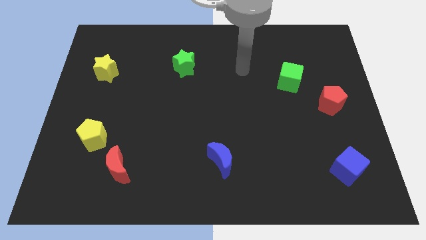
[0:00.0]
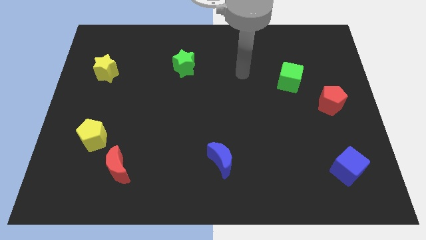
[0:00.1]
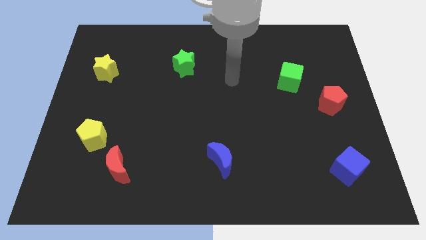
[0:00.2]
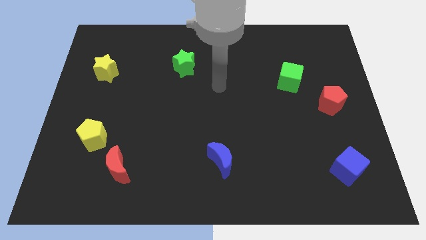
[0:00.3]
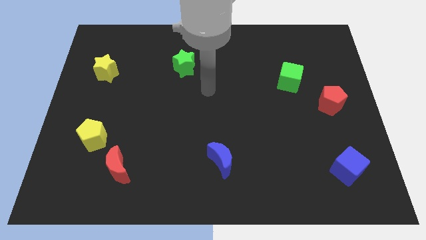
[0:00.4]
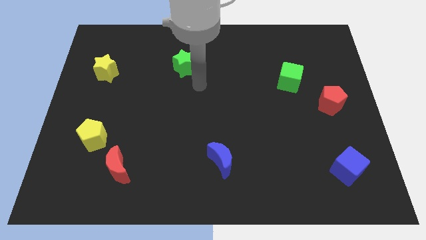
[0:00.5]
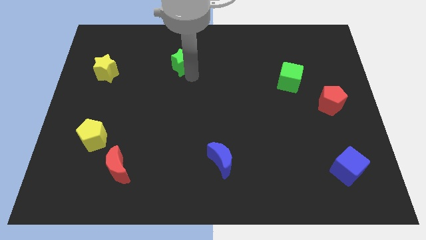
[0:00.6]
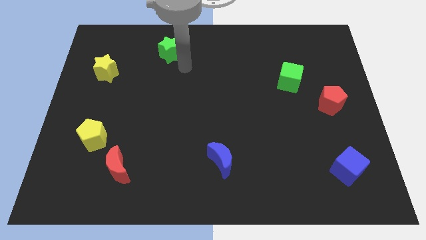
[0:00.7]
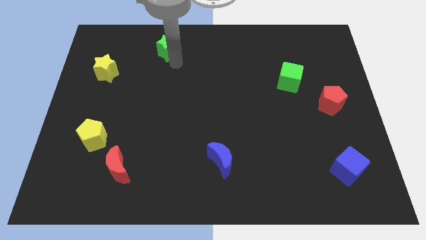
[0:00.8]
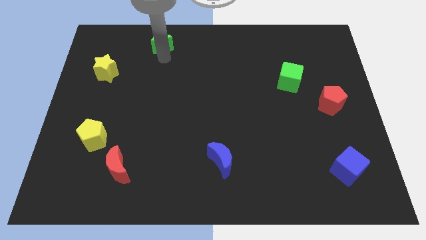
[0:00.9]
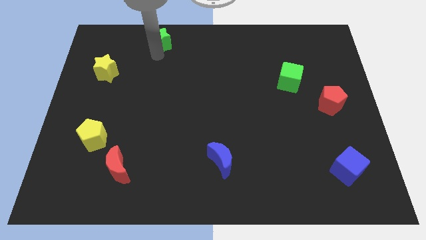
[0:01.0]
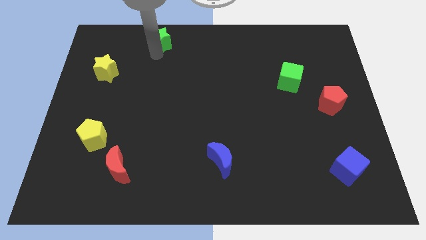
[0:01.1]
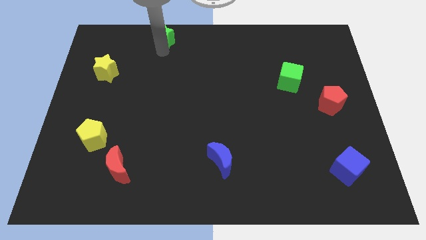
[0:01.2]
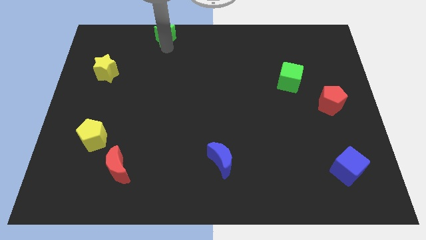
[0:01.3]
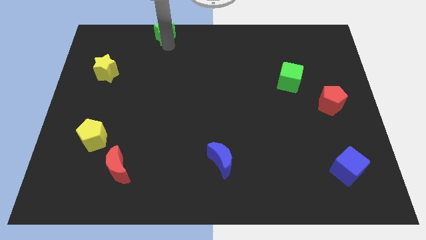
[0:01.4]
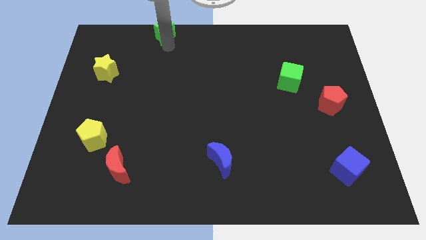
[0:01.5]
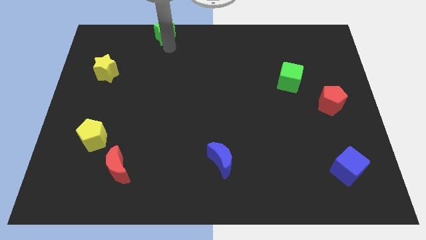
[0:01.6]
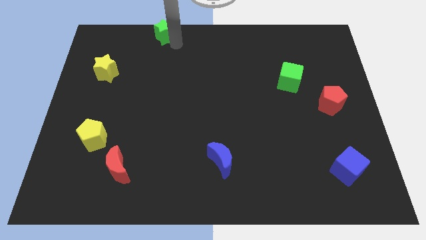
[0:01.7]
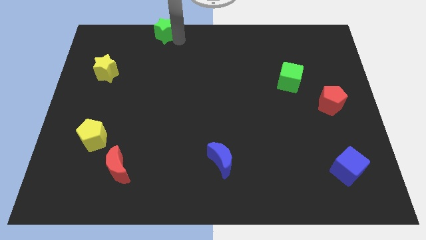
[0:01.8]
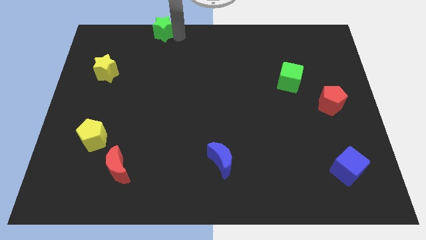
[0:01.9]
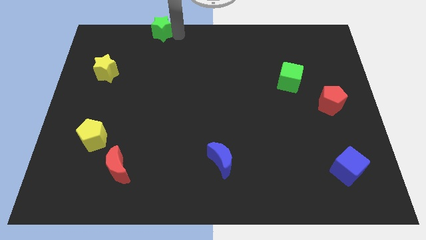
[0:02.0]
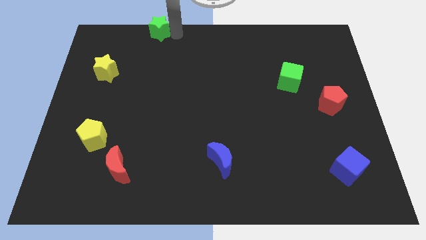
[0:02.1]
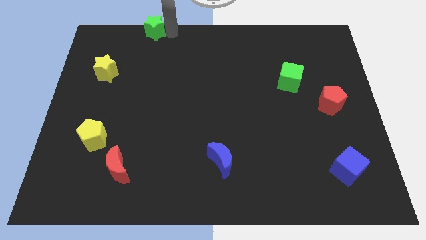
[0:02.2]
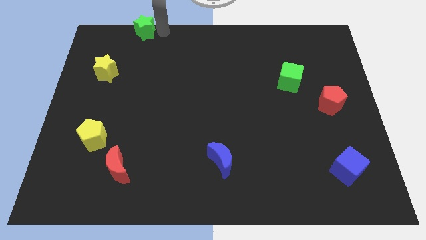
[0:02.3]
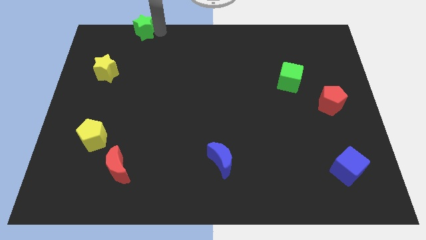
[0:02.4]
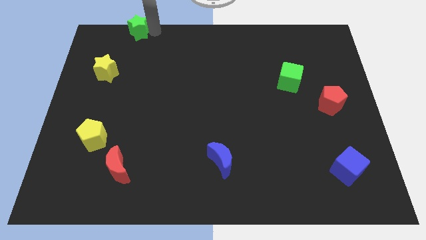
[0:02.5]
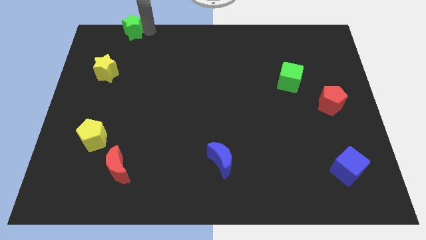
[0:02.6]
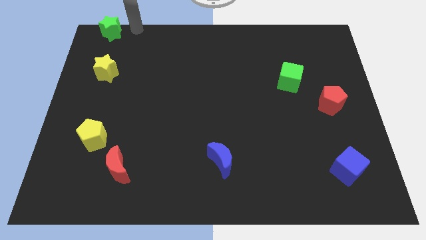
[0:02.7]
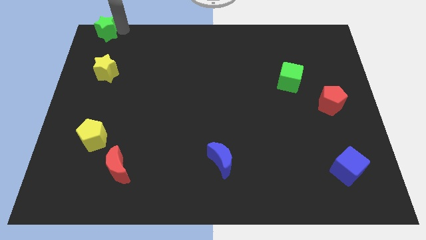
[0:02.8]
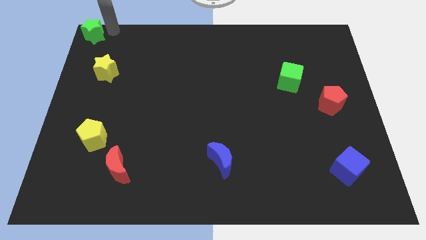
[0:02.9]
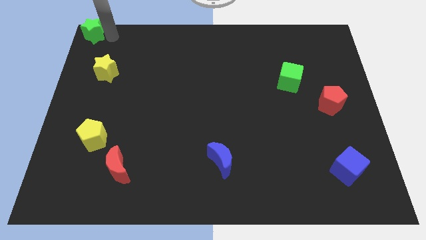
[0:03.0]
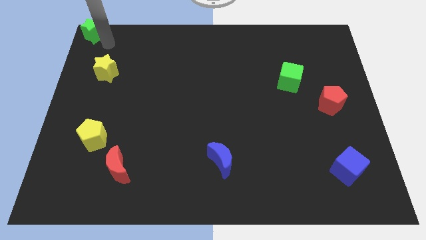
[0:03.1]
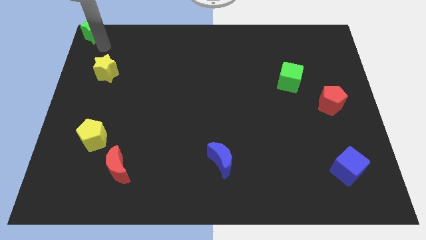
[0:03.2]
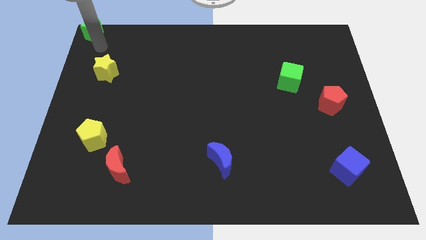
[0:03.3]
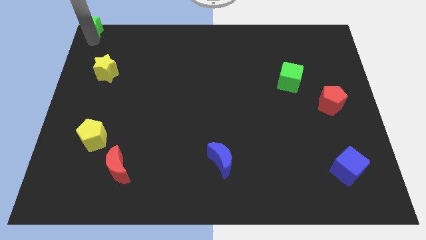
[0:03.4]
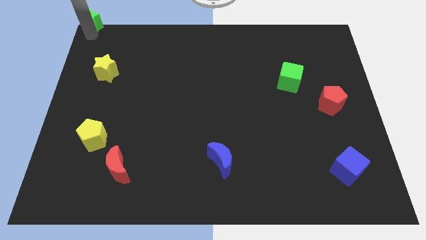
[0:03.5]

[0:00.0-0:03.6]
put the green star at the top left corner of the board

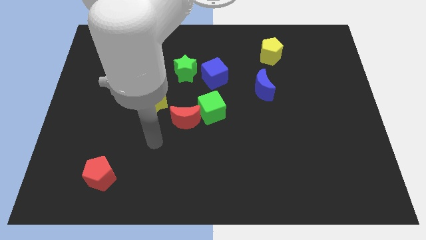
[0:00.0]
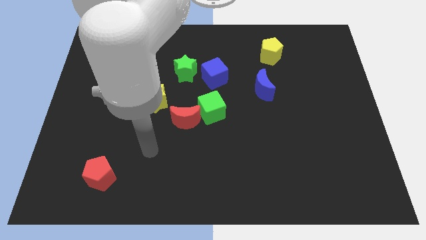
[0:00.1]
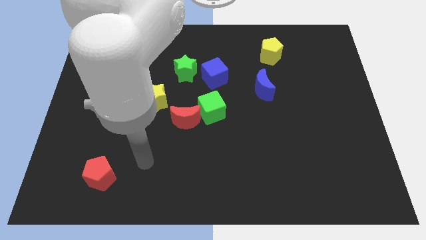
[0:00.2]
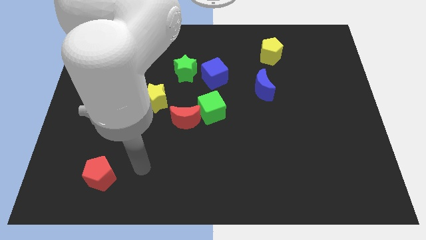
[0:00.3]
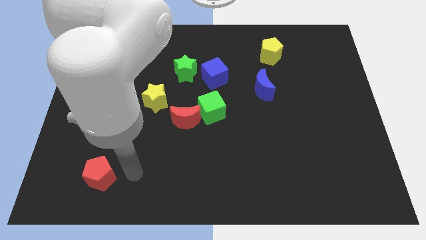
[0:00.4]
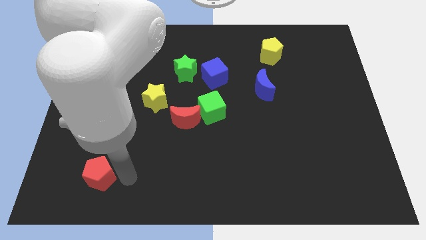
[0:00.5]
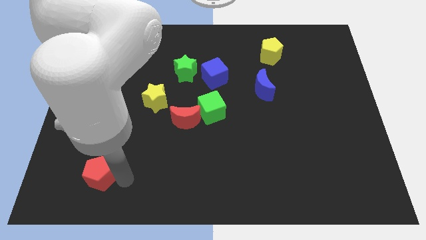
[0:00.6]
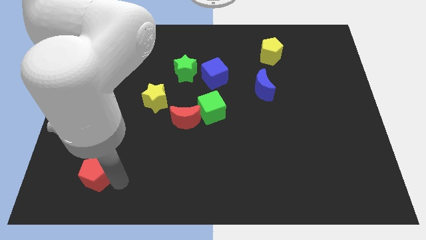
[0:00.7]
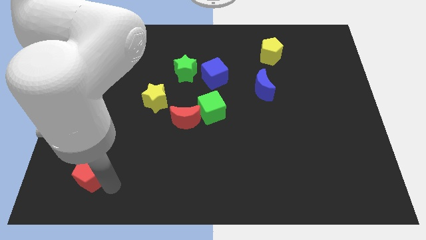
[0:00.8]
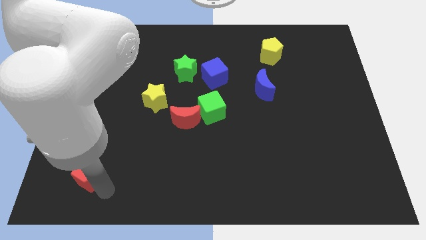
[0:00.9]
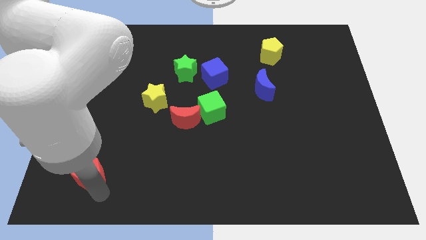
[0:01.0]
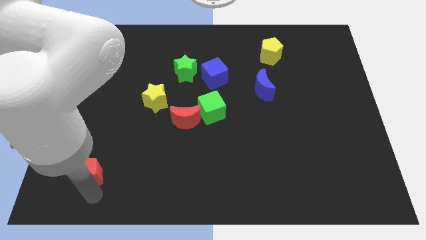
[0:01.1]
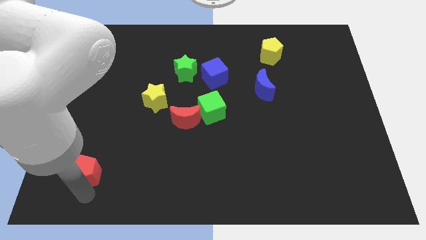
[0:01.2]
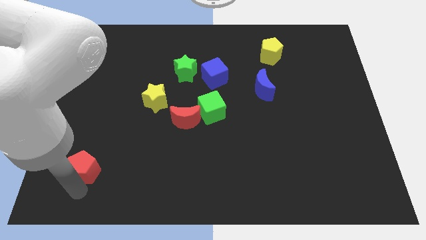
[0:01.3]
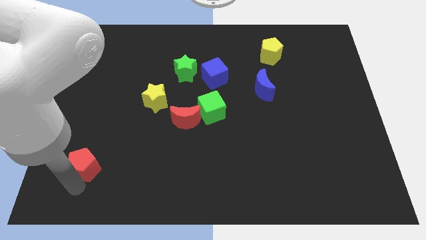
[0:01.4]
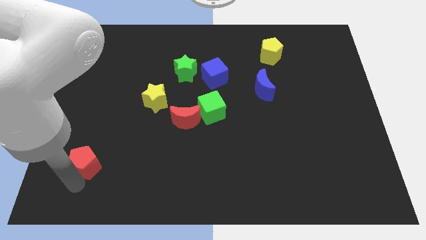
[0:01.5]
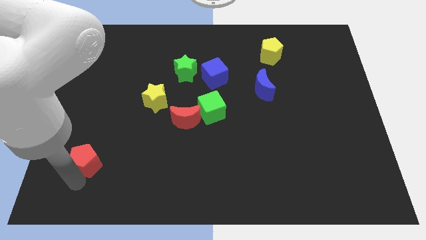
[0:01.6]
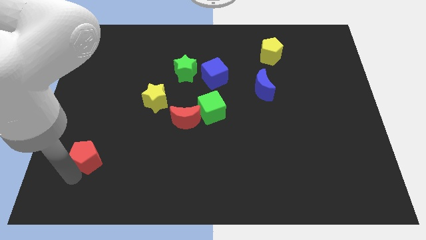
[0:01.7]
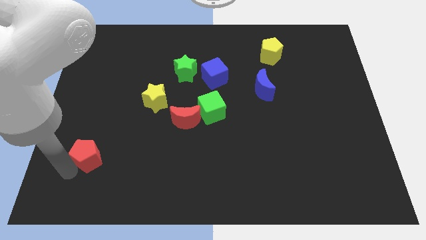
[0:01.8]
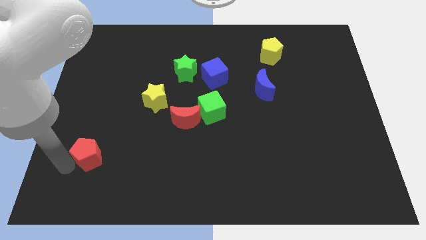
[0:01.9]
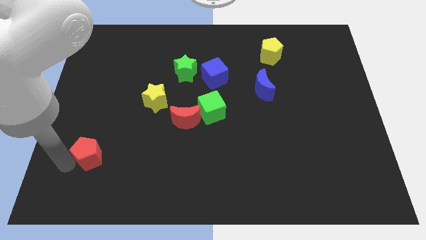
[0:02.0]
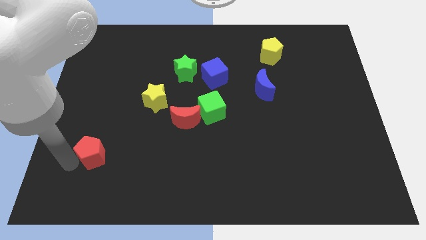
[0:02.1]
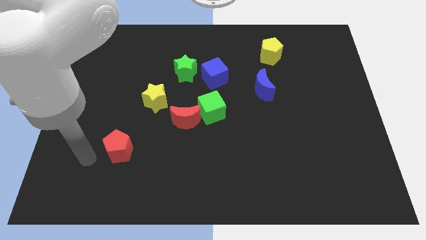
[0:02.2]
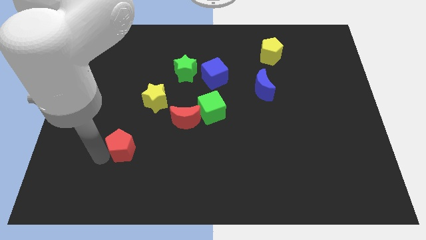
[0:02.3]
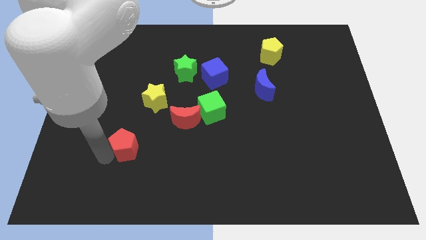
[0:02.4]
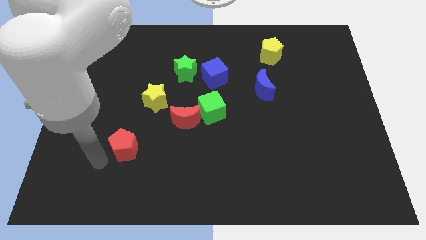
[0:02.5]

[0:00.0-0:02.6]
push the red pentagon to the bottom left of the yellow star

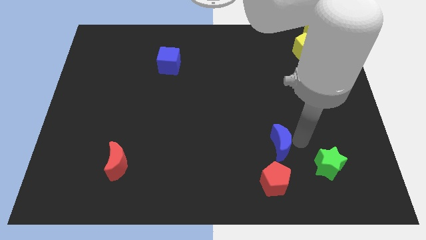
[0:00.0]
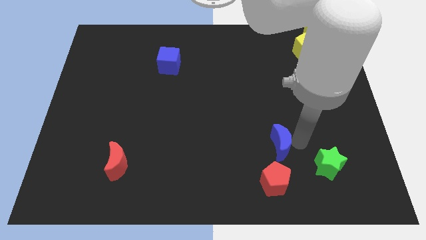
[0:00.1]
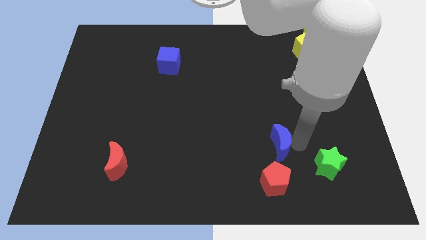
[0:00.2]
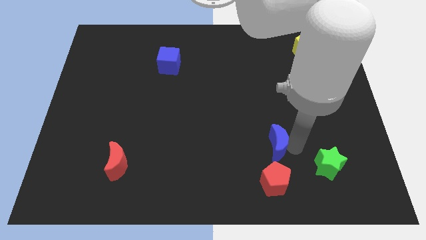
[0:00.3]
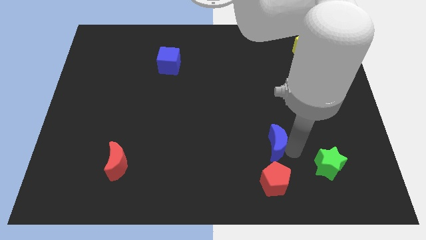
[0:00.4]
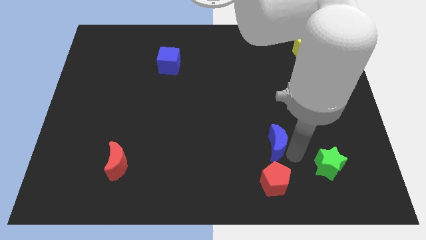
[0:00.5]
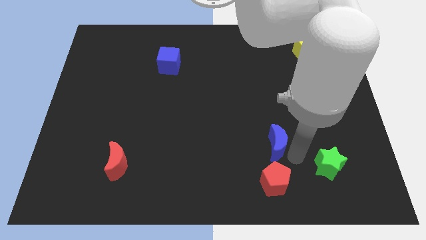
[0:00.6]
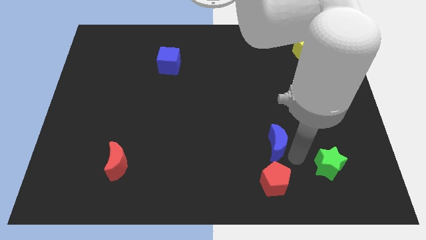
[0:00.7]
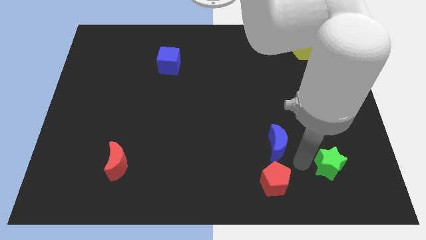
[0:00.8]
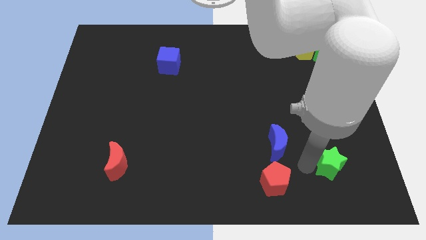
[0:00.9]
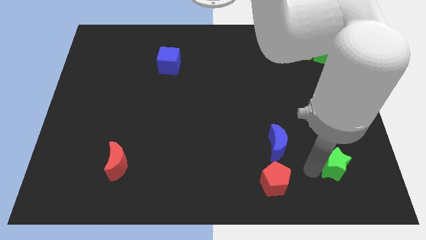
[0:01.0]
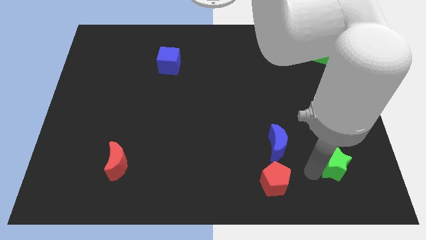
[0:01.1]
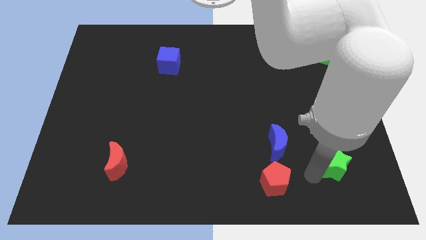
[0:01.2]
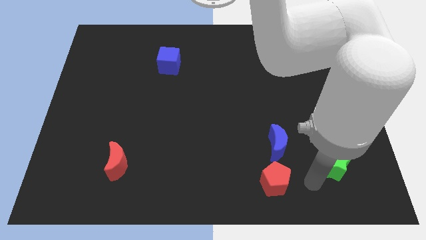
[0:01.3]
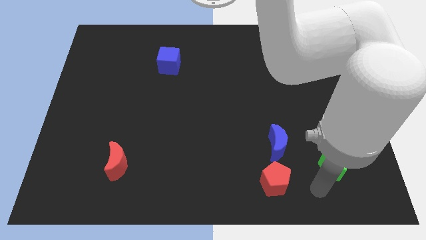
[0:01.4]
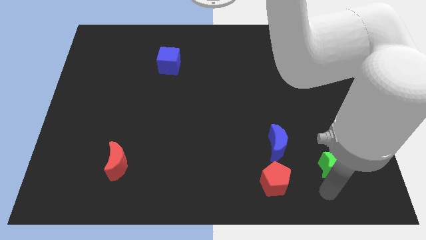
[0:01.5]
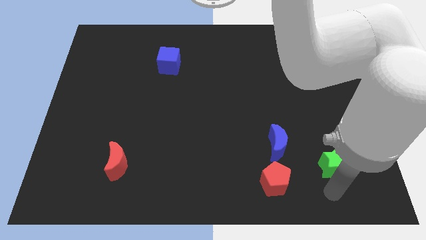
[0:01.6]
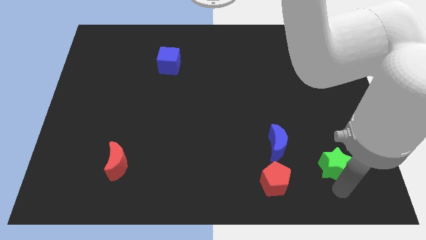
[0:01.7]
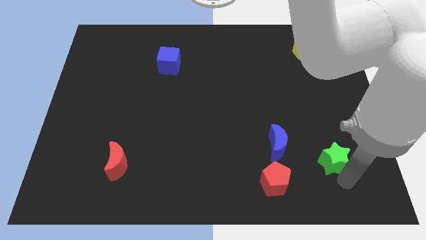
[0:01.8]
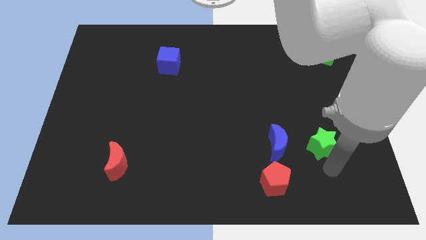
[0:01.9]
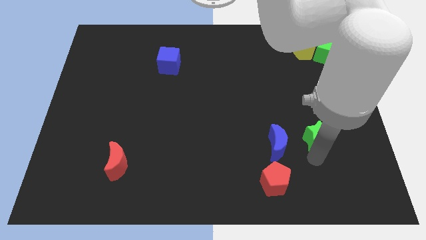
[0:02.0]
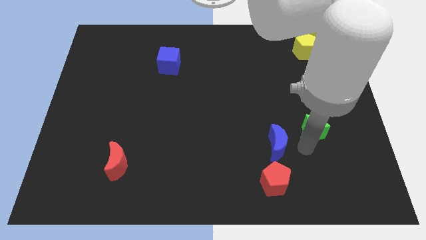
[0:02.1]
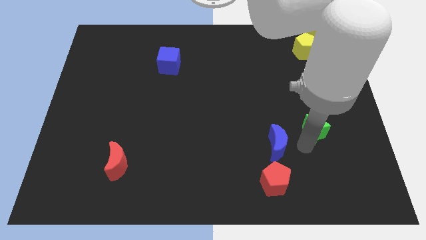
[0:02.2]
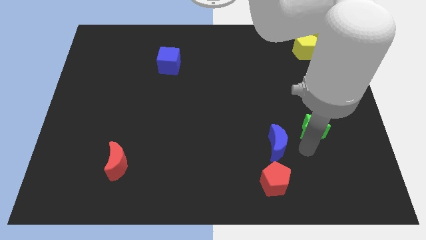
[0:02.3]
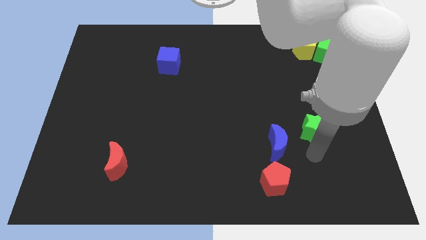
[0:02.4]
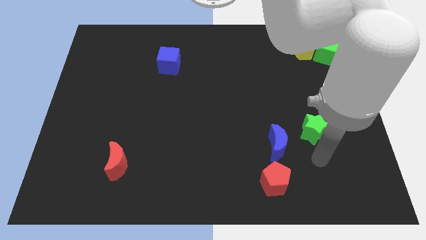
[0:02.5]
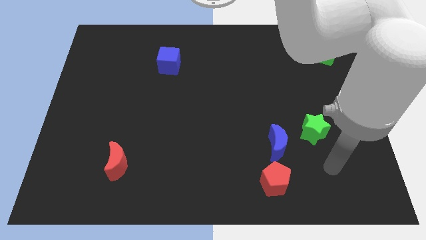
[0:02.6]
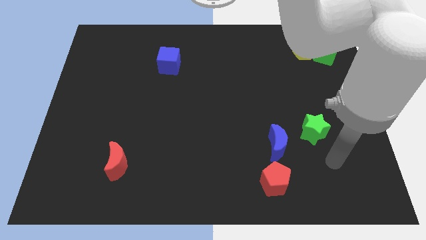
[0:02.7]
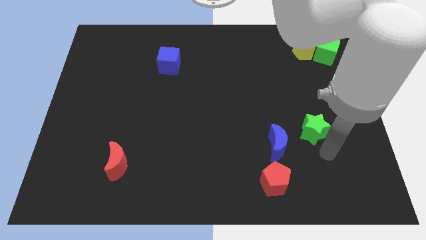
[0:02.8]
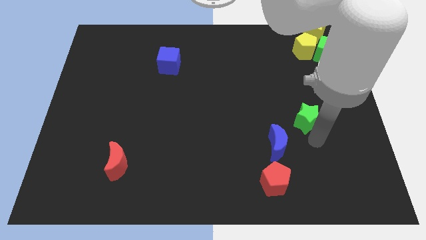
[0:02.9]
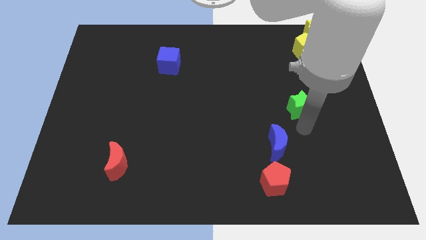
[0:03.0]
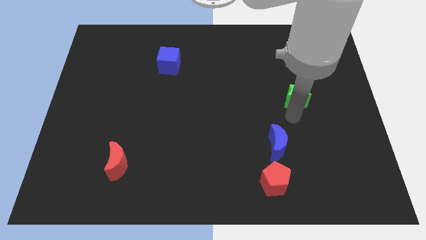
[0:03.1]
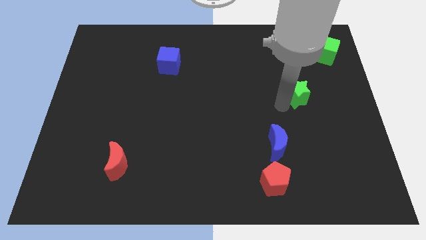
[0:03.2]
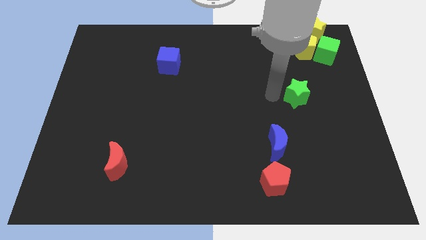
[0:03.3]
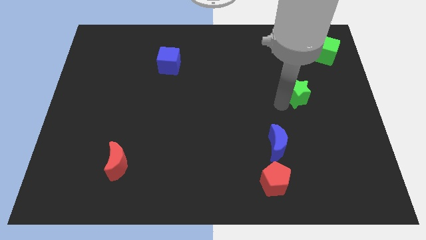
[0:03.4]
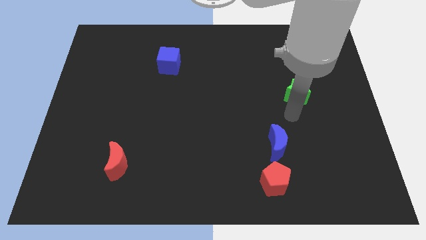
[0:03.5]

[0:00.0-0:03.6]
place green star above yellow pentagon
